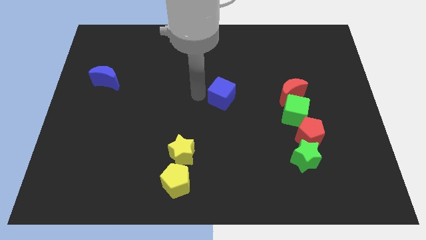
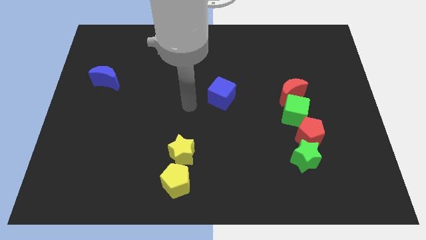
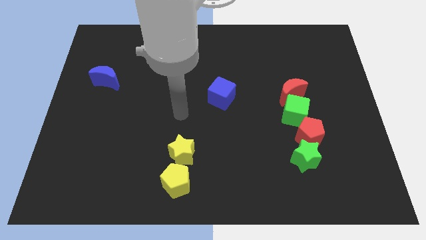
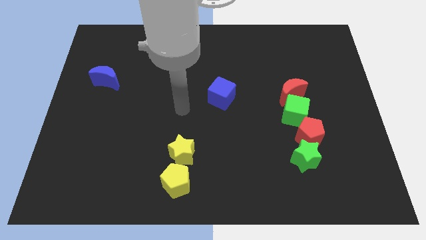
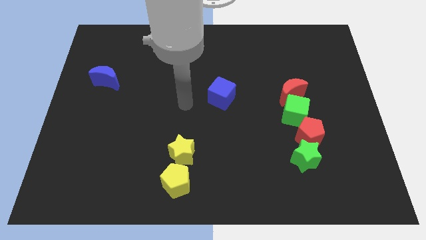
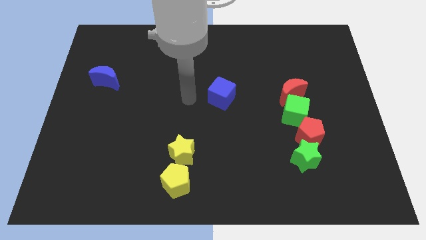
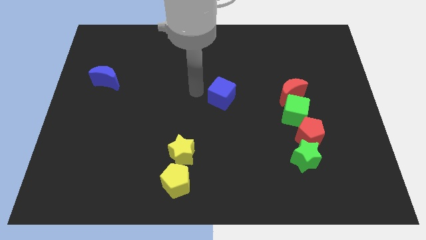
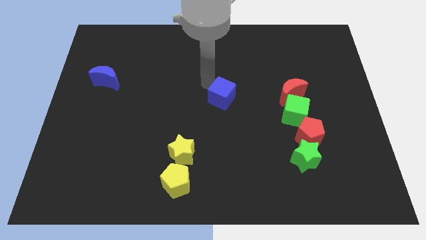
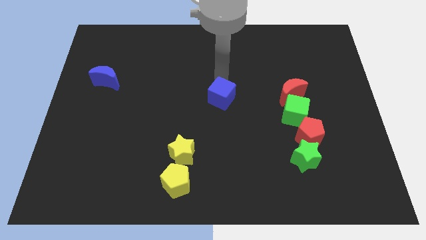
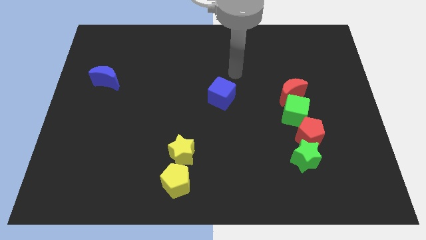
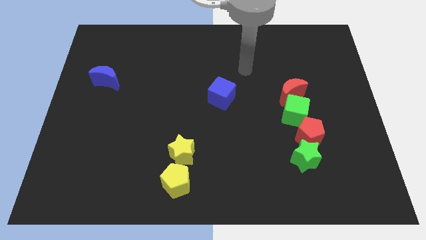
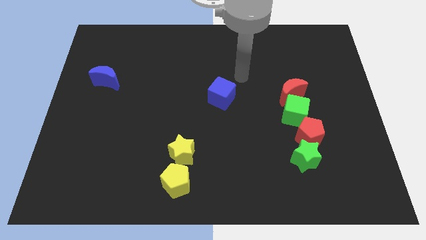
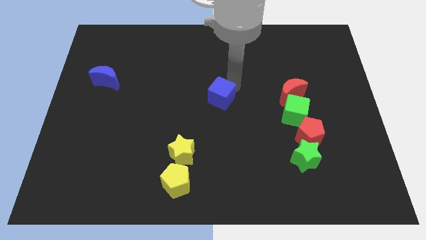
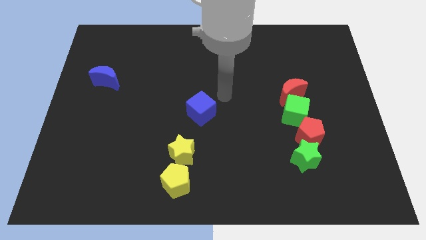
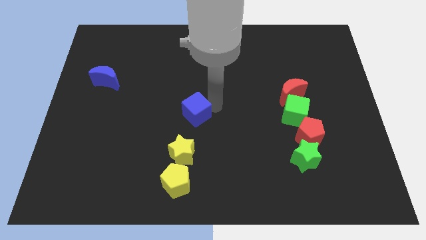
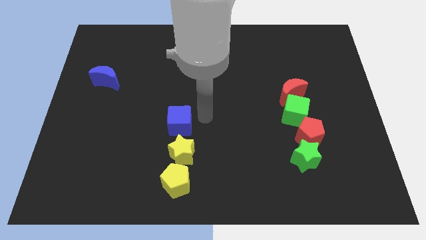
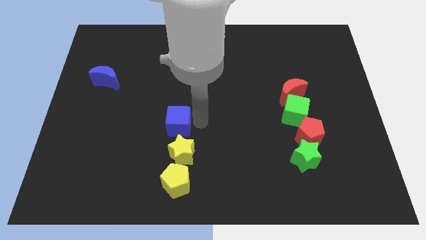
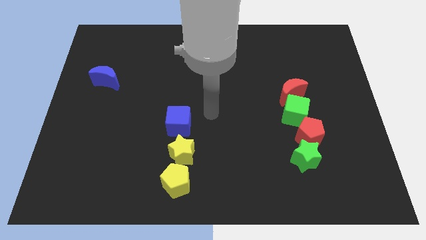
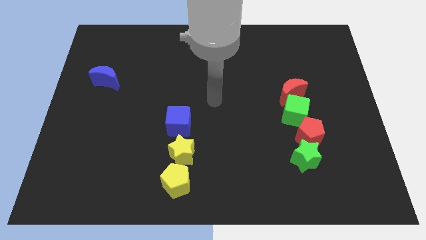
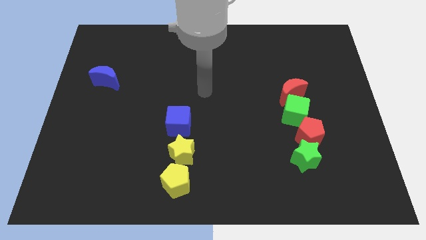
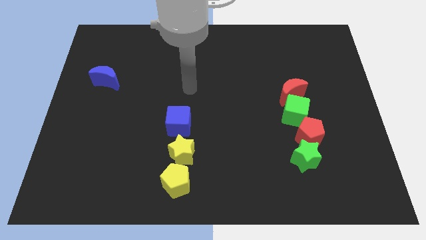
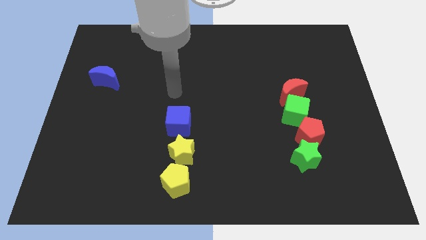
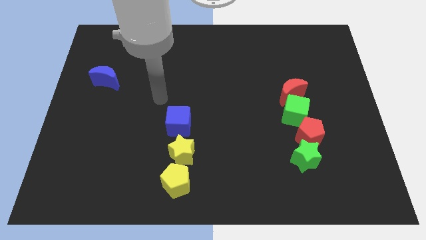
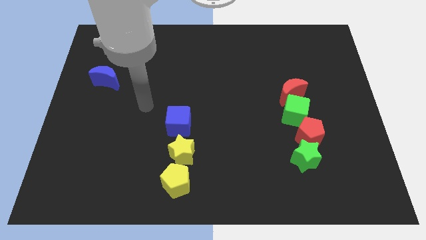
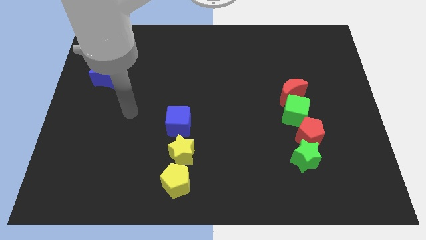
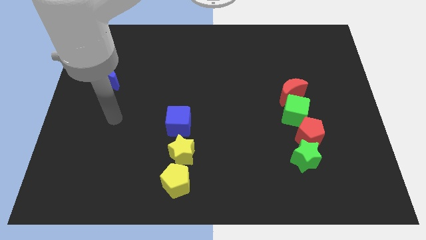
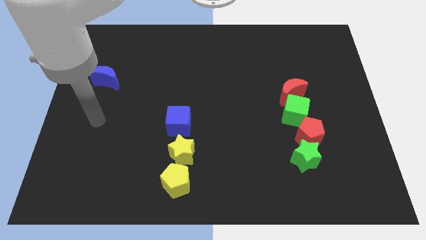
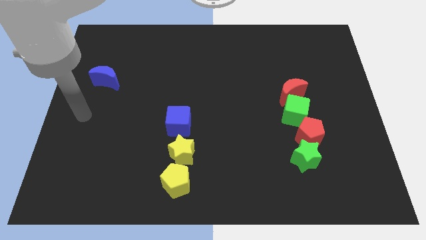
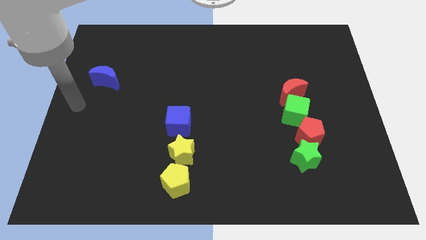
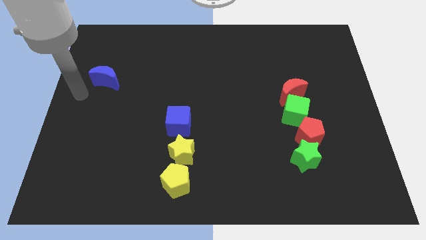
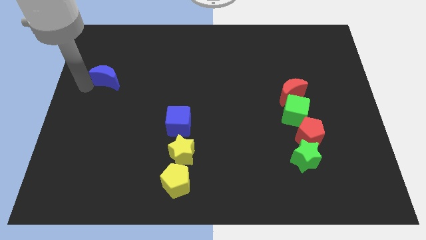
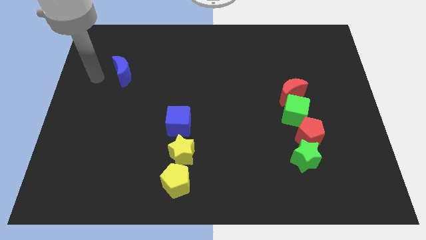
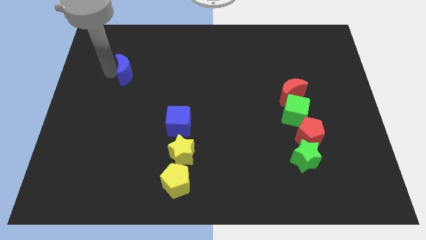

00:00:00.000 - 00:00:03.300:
move blue cube above the yellow star

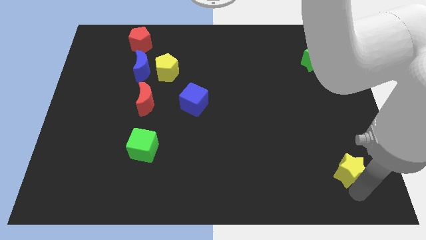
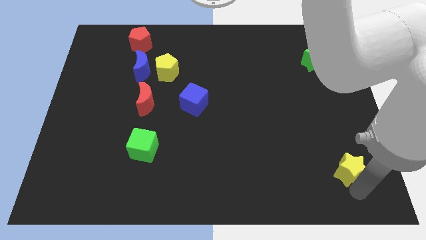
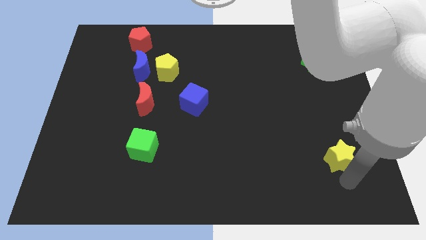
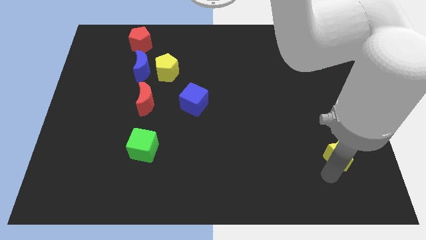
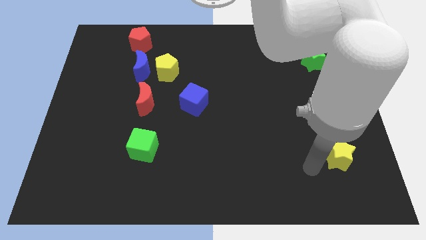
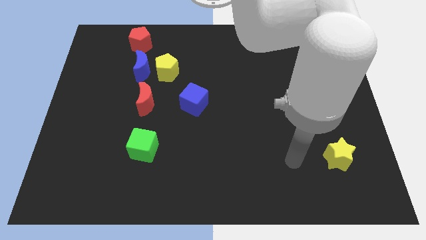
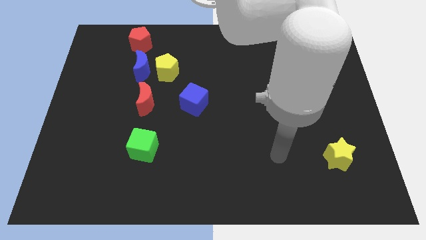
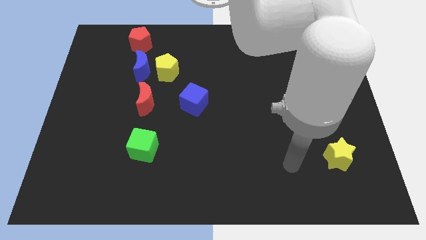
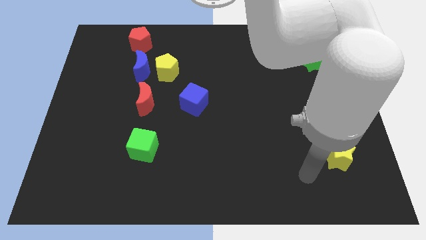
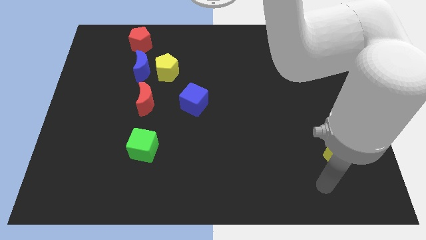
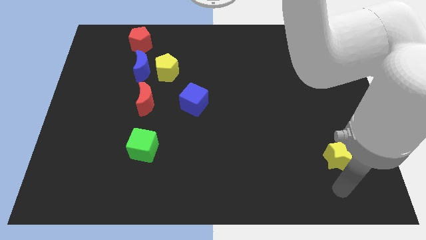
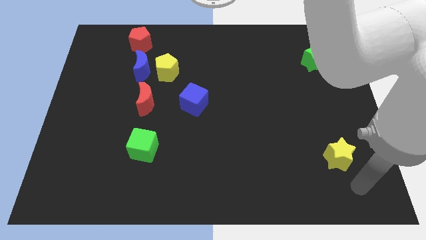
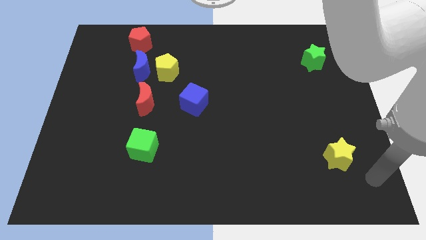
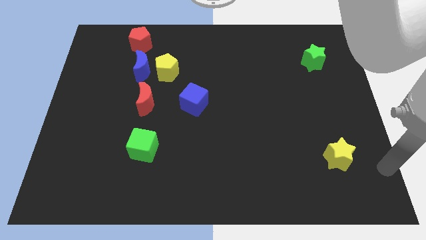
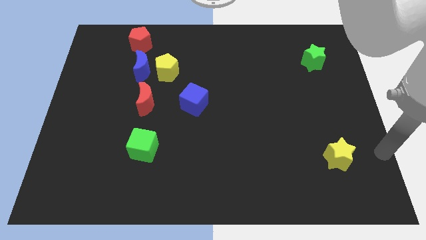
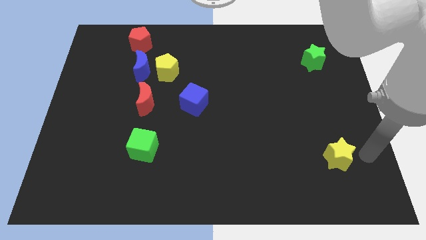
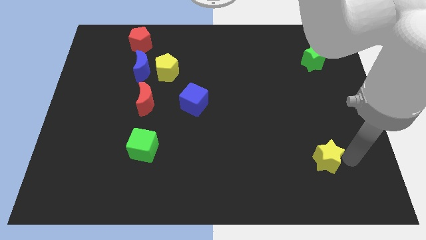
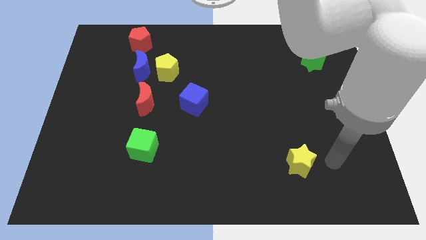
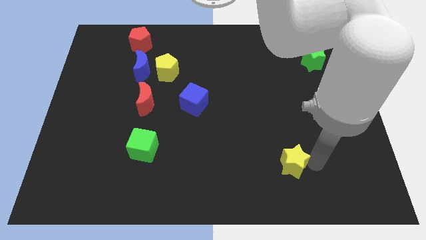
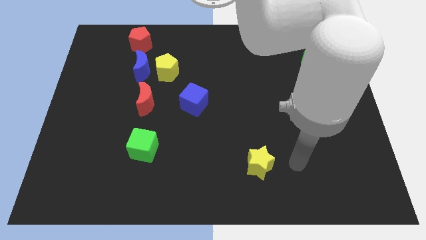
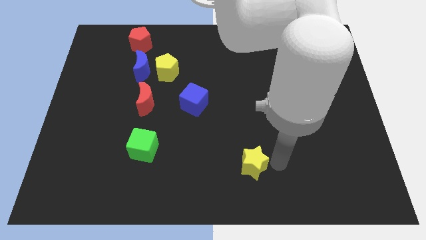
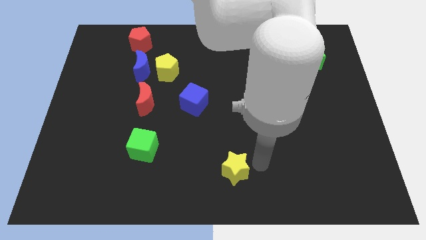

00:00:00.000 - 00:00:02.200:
slide the yellow star to the bottom center

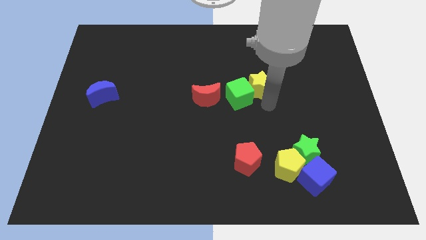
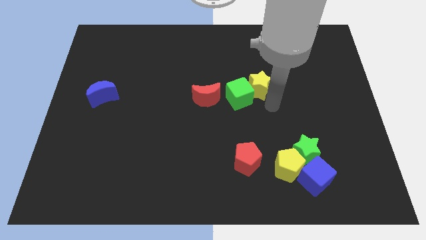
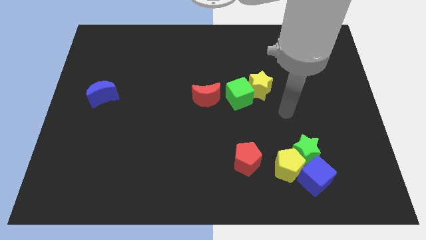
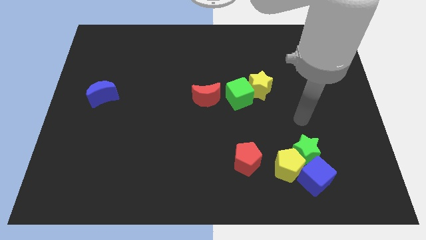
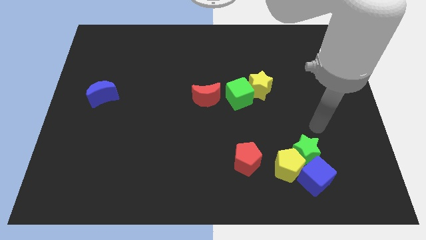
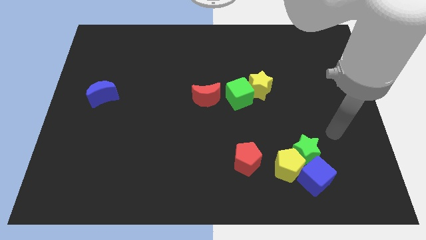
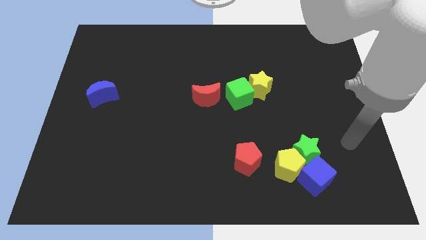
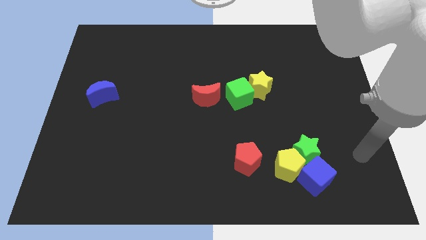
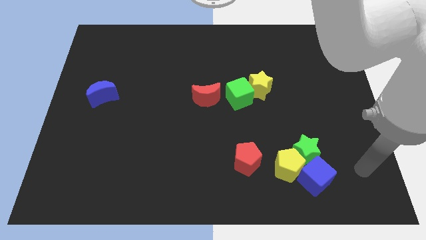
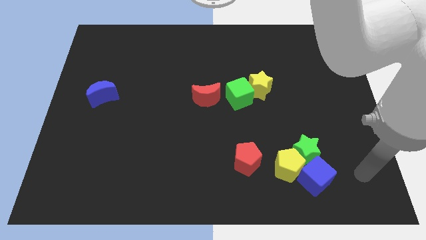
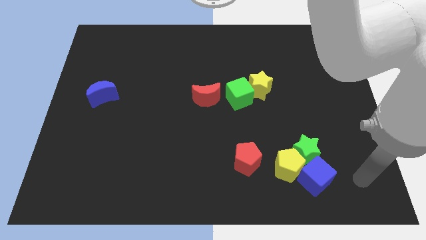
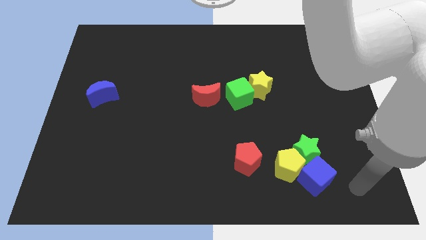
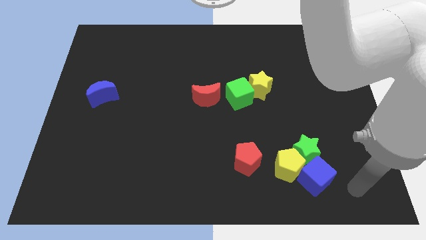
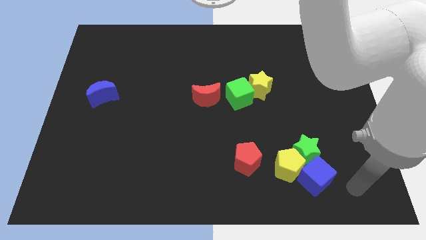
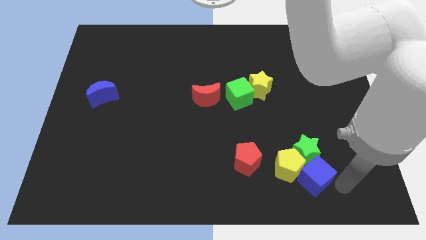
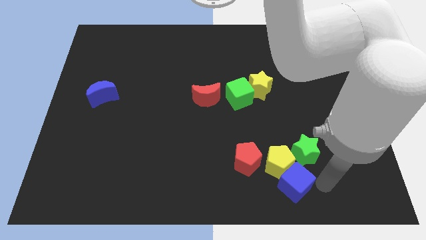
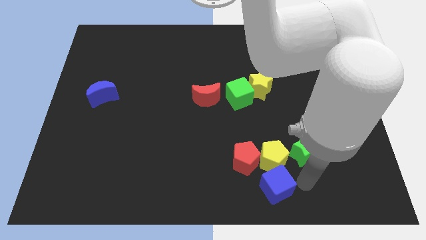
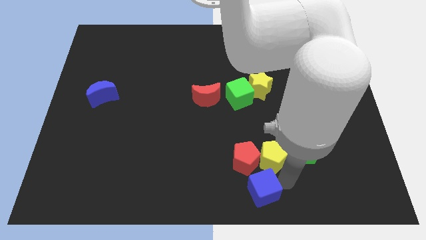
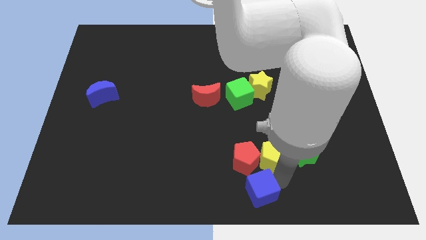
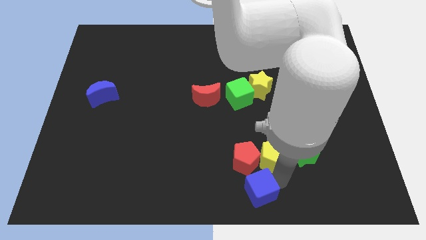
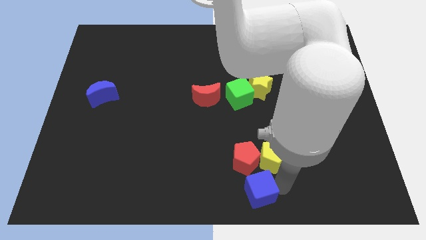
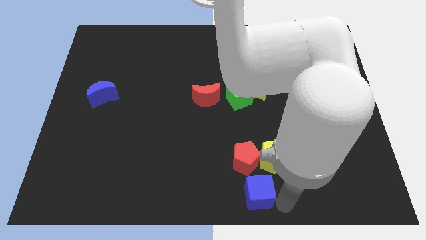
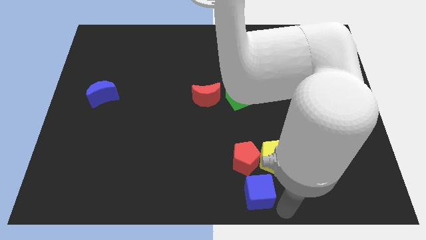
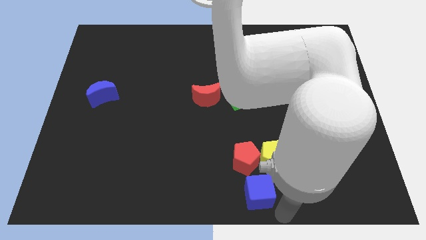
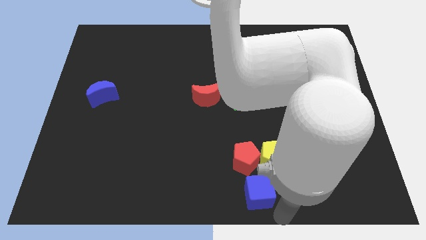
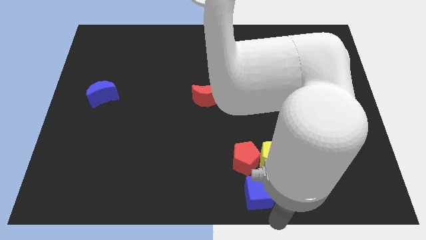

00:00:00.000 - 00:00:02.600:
move the blue cube slightly to the left

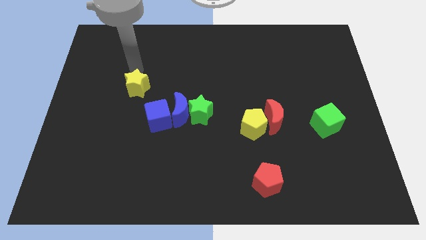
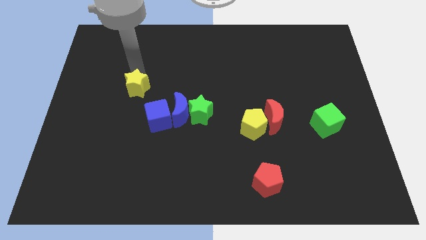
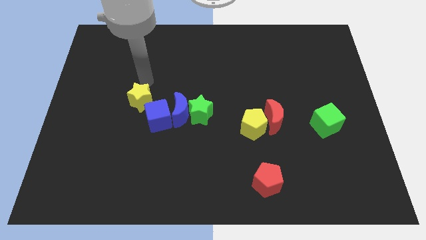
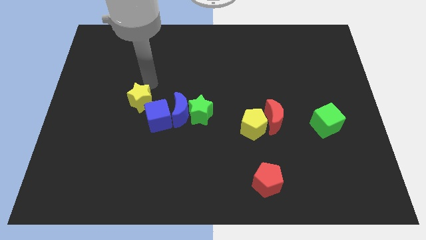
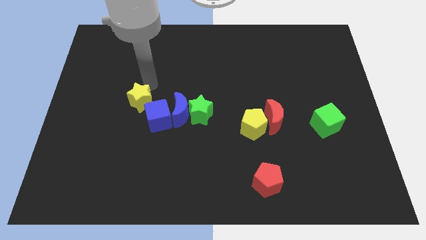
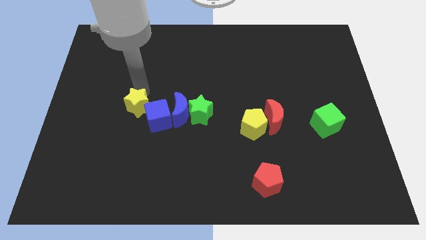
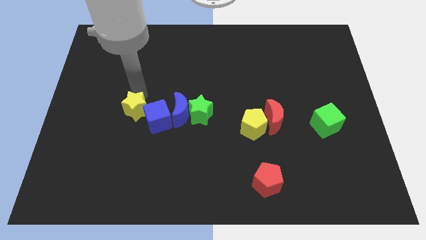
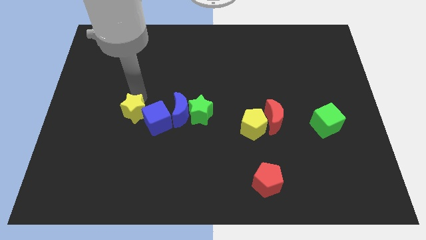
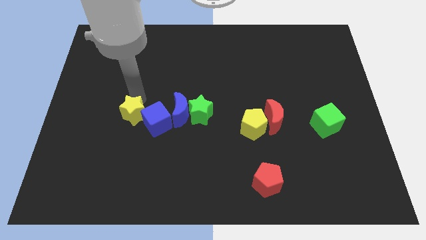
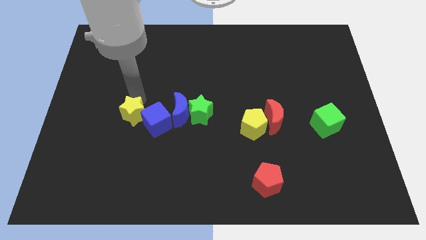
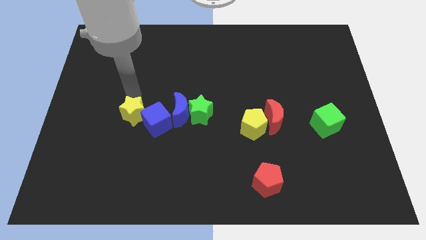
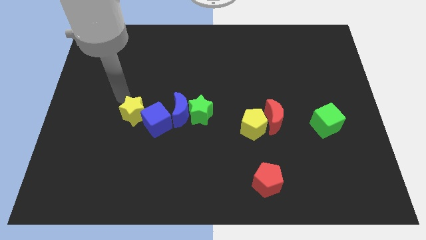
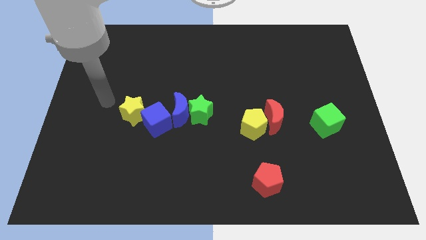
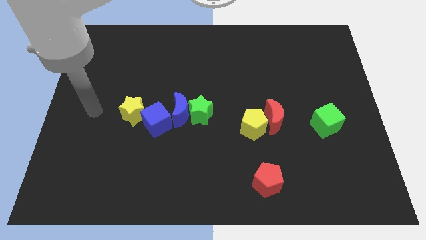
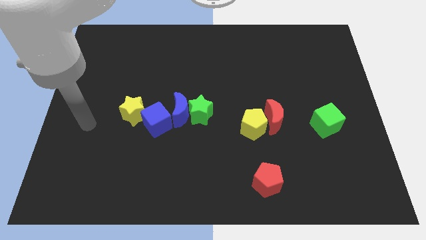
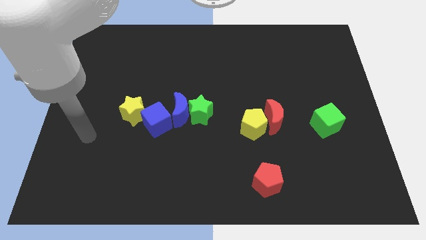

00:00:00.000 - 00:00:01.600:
drag the yellow star close to the blue cube
